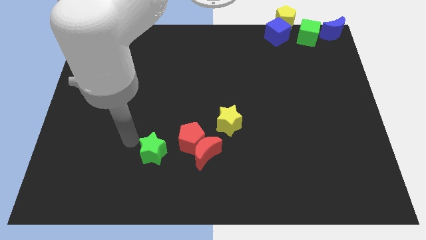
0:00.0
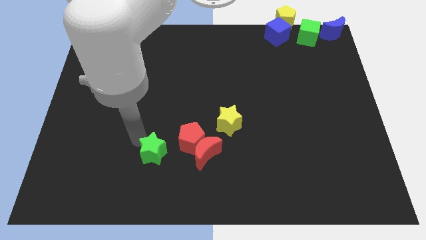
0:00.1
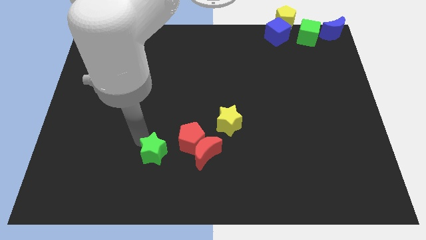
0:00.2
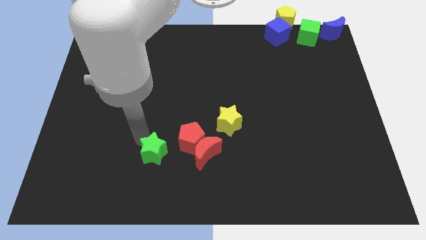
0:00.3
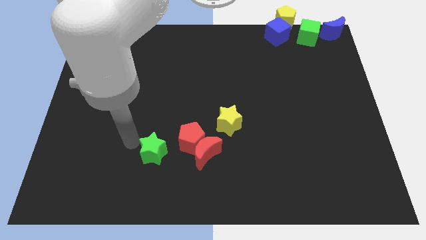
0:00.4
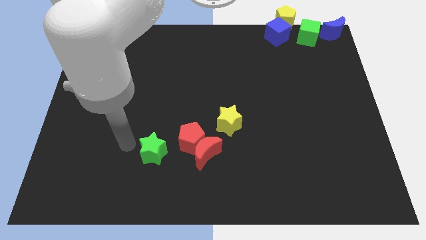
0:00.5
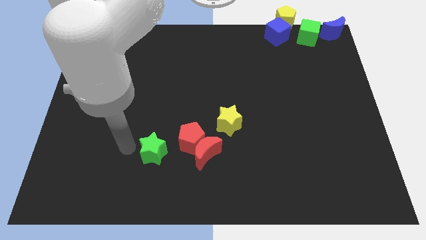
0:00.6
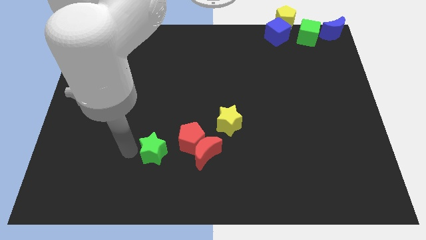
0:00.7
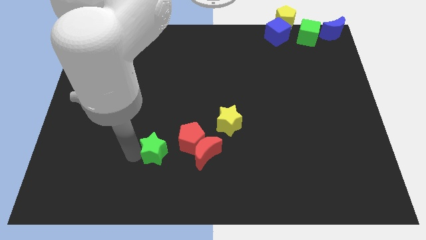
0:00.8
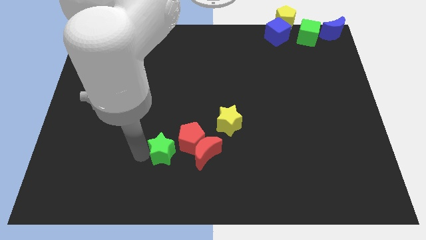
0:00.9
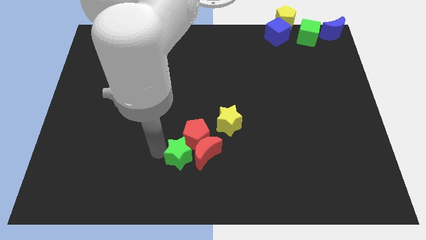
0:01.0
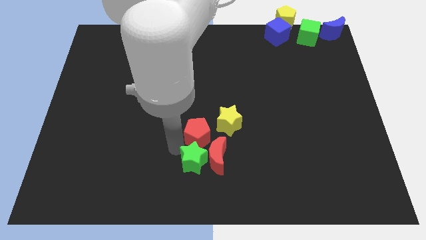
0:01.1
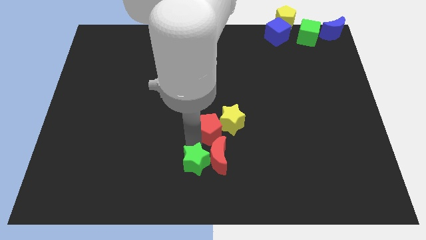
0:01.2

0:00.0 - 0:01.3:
move the green star vertically below the red pentagon

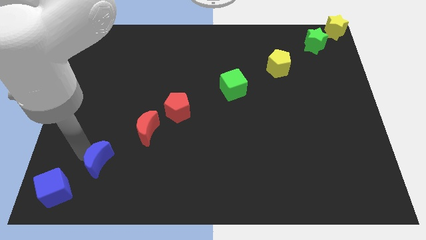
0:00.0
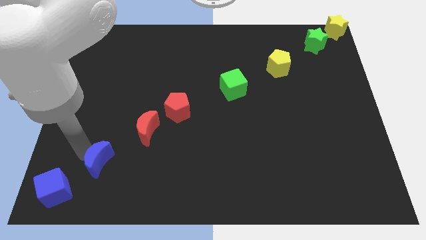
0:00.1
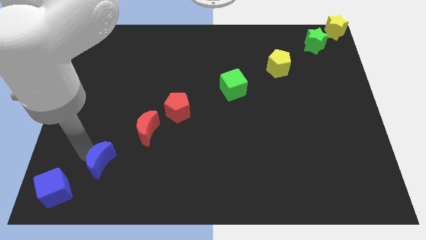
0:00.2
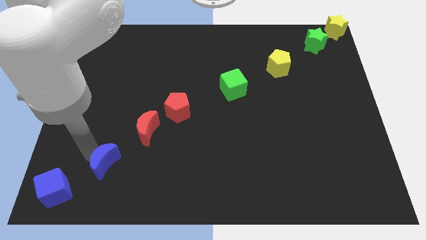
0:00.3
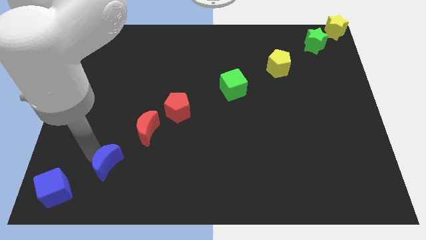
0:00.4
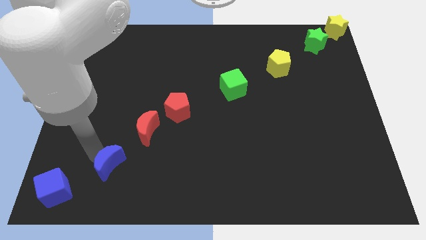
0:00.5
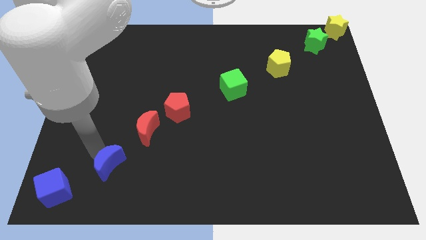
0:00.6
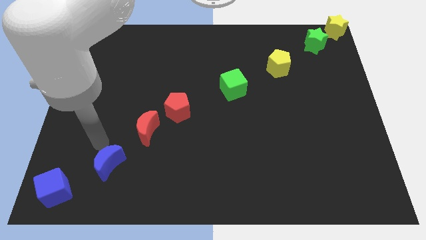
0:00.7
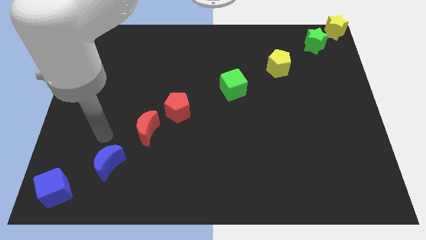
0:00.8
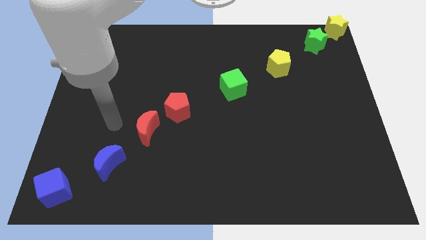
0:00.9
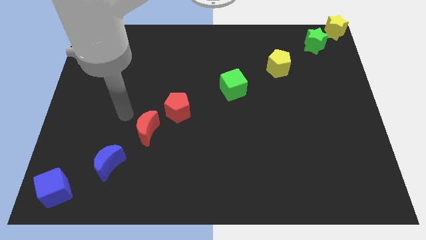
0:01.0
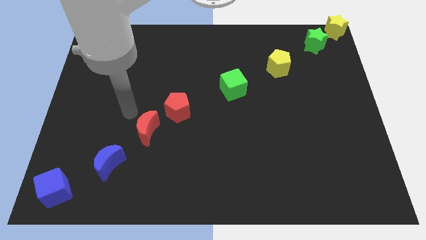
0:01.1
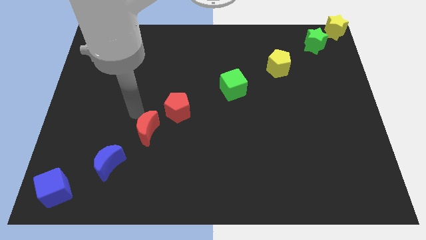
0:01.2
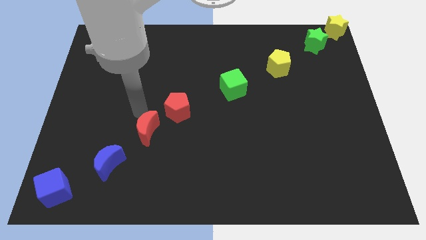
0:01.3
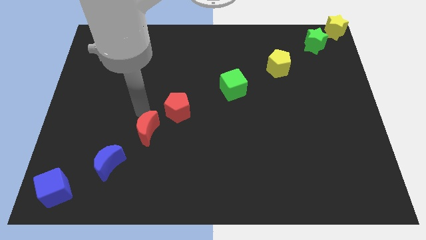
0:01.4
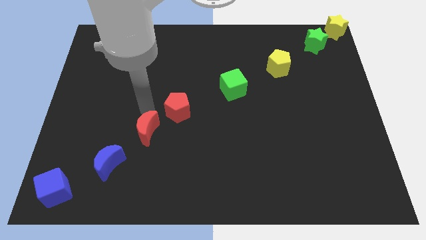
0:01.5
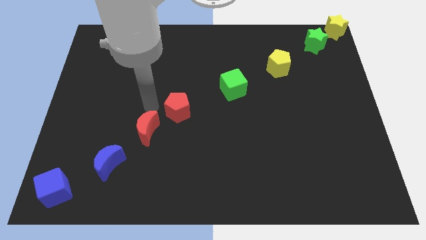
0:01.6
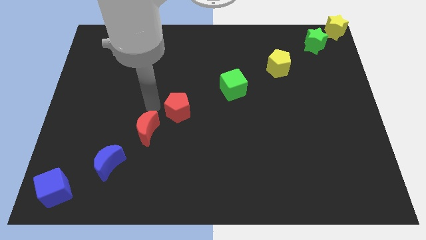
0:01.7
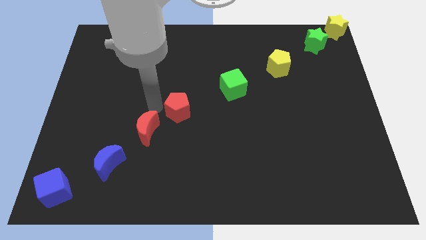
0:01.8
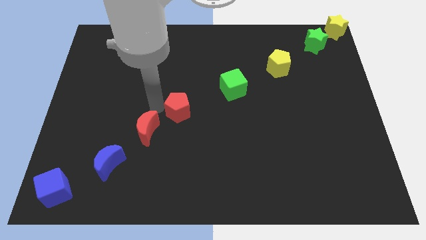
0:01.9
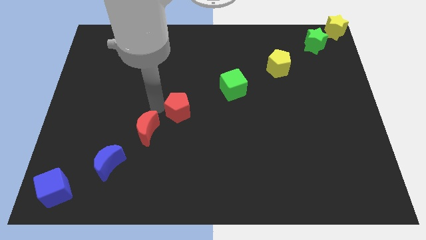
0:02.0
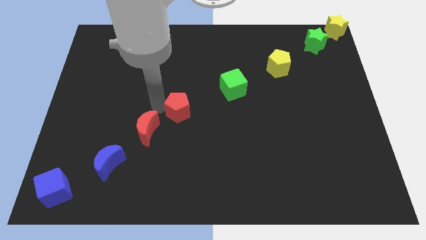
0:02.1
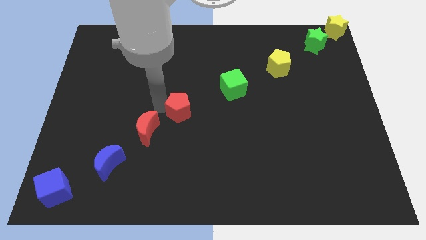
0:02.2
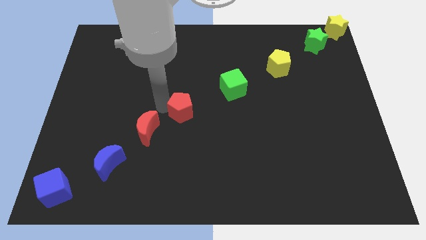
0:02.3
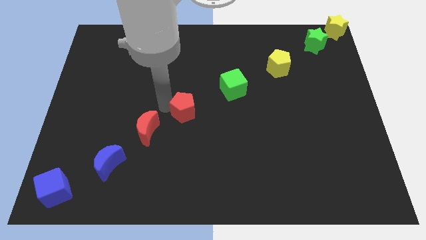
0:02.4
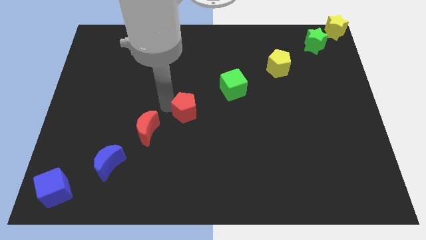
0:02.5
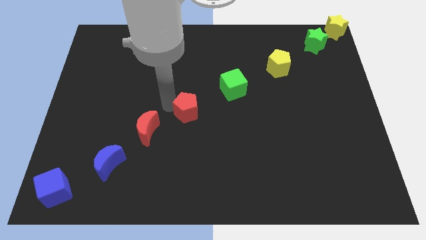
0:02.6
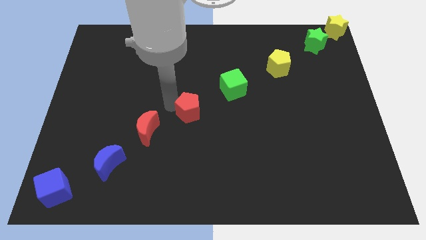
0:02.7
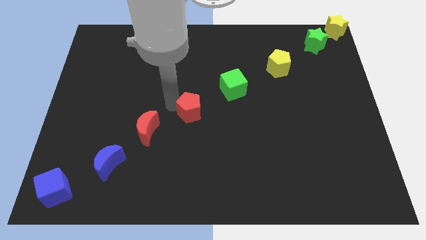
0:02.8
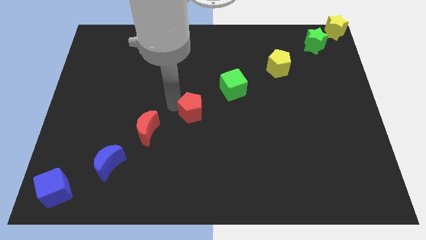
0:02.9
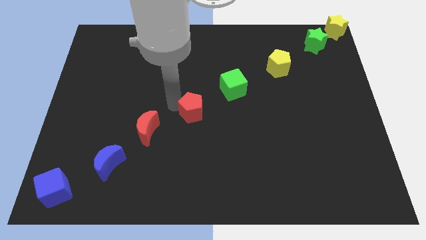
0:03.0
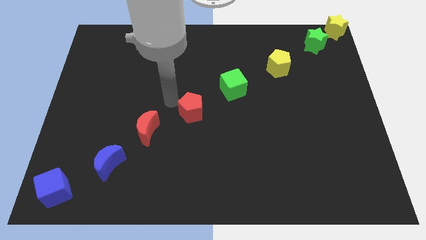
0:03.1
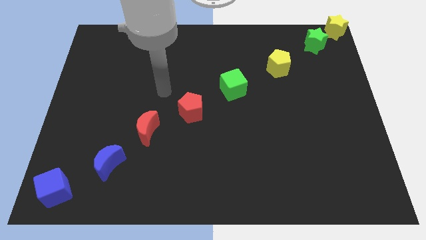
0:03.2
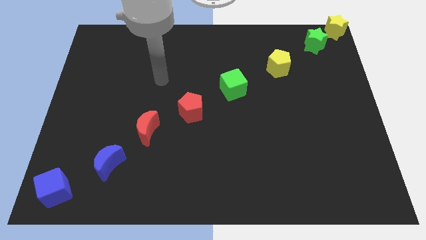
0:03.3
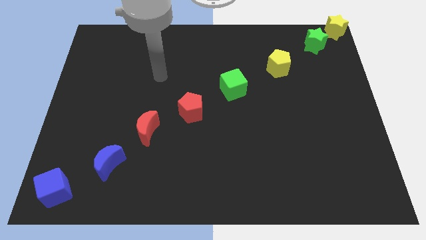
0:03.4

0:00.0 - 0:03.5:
slide red pentagon towards the green cube

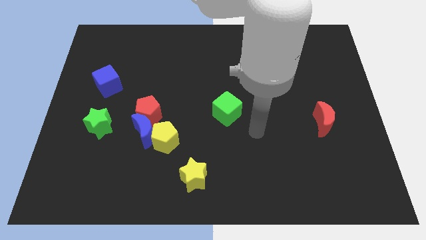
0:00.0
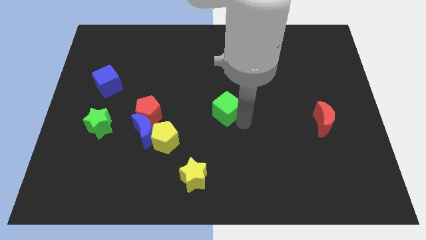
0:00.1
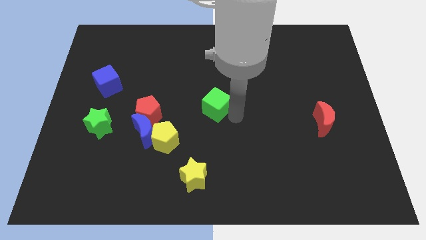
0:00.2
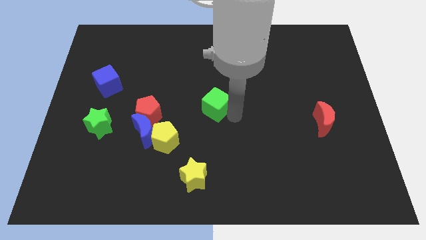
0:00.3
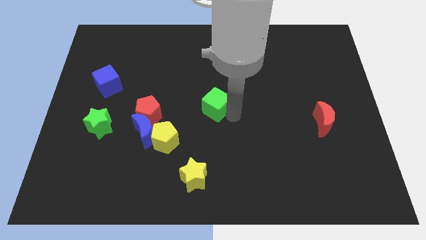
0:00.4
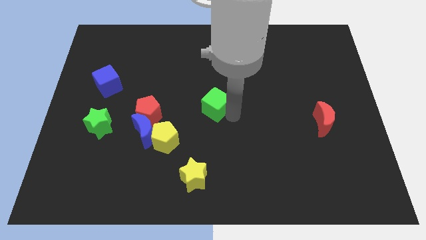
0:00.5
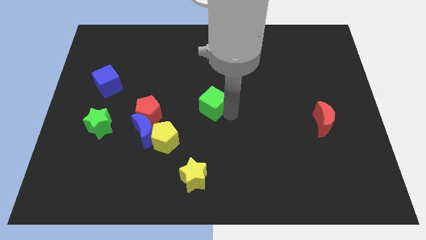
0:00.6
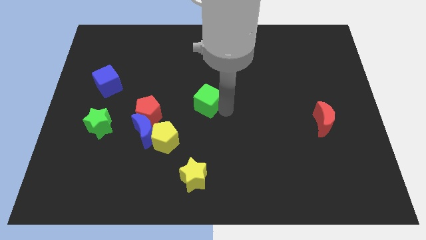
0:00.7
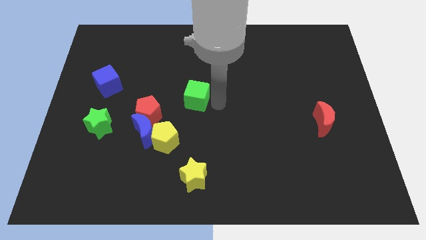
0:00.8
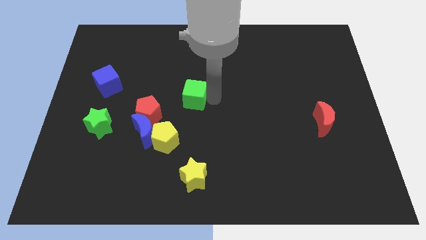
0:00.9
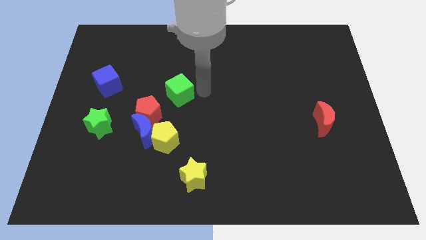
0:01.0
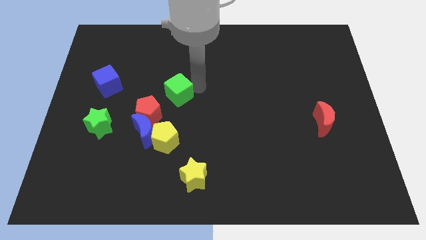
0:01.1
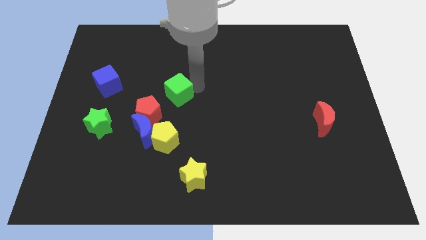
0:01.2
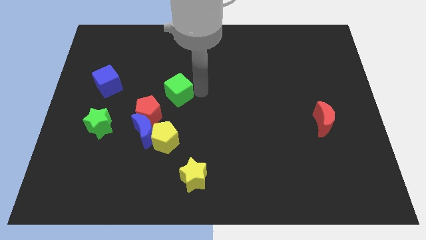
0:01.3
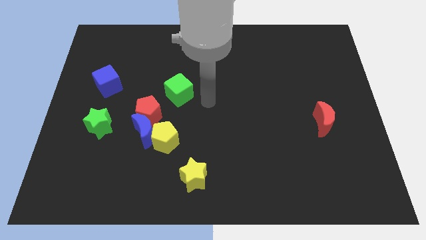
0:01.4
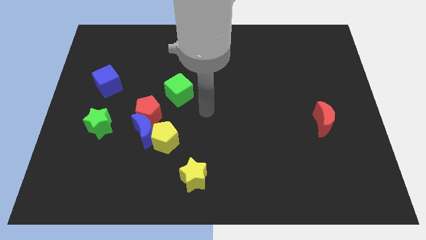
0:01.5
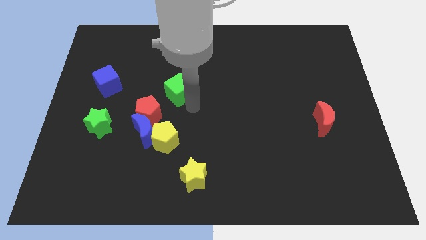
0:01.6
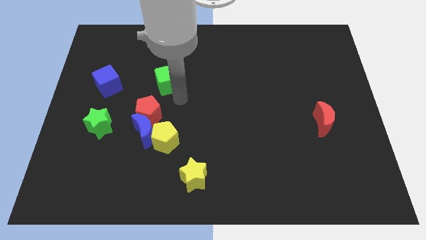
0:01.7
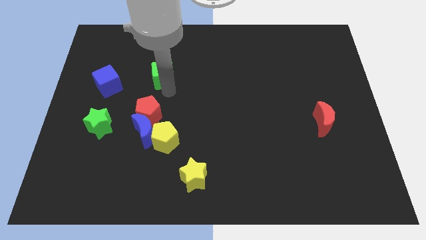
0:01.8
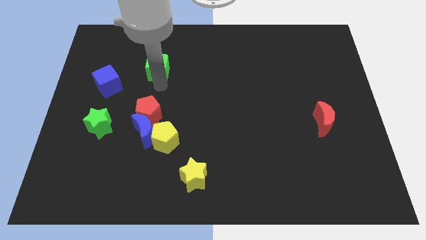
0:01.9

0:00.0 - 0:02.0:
place green cube above the red pentagon

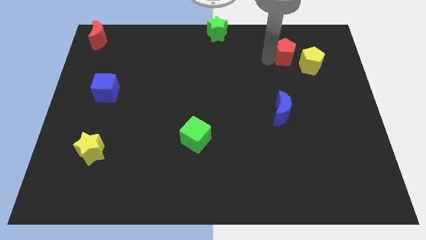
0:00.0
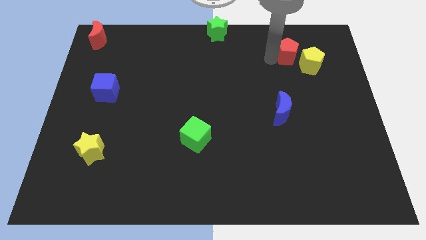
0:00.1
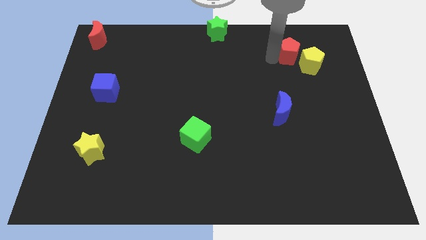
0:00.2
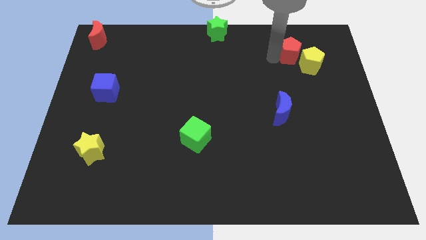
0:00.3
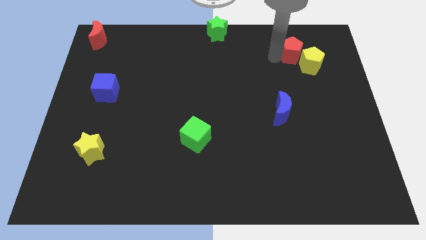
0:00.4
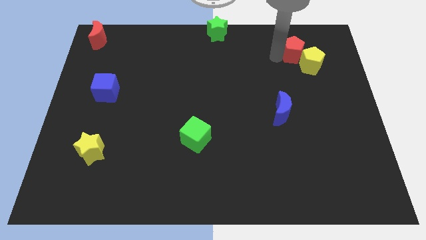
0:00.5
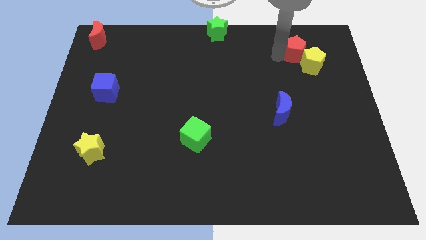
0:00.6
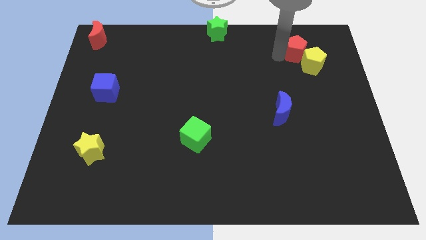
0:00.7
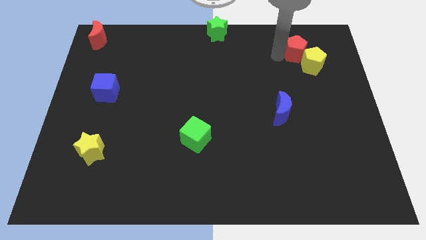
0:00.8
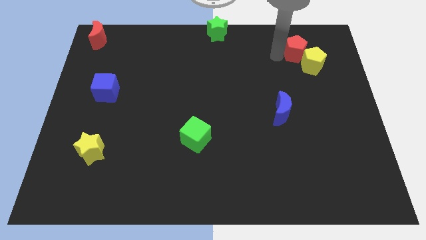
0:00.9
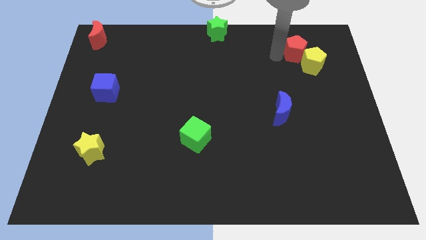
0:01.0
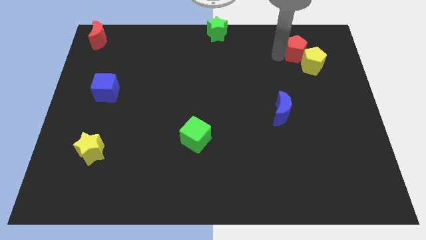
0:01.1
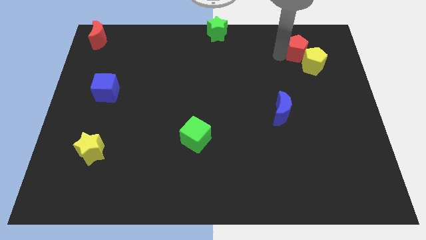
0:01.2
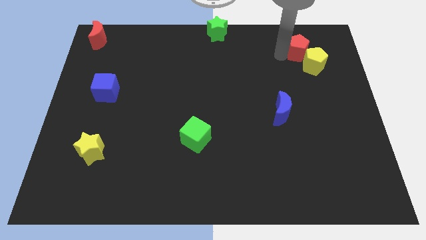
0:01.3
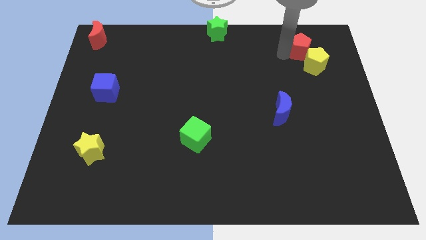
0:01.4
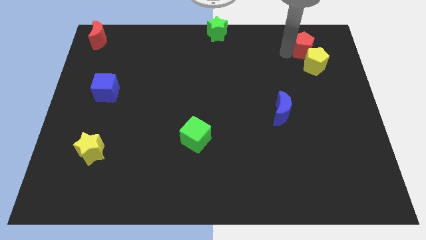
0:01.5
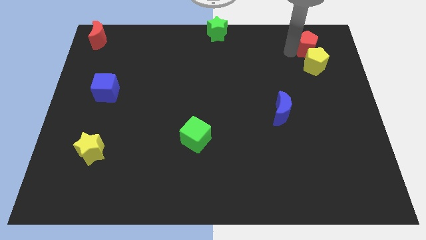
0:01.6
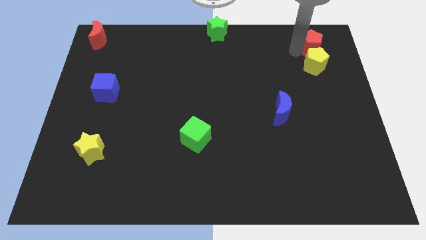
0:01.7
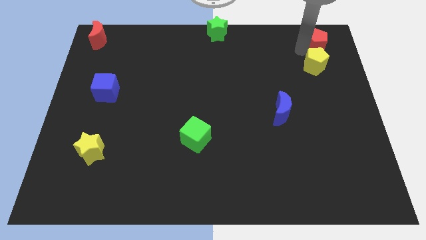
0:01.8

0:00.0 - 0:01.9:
attach the red pentagon and the yellow pentagon
